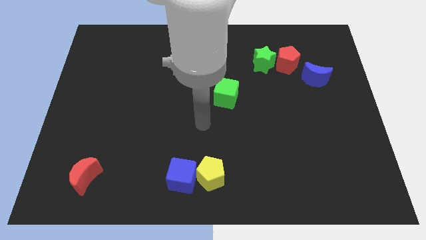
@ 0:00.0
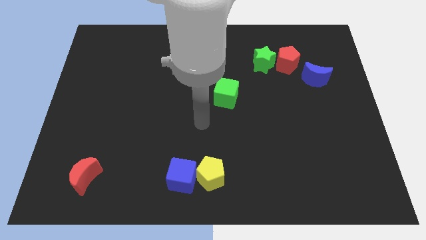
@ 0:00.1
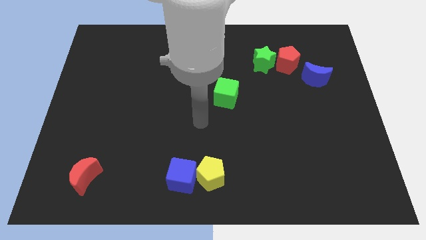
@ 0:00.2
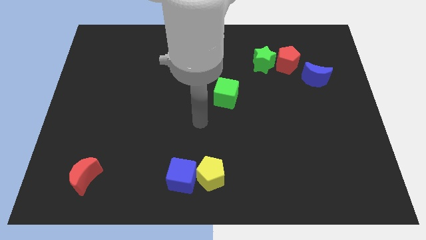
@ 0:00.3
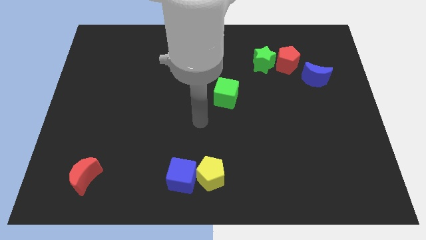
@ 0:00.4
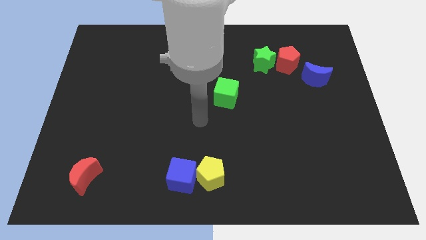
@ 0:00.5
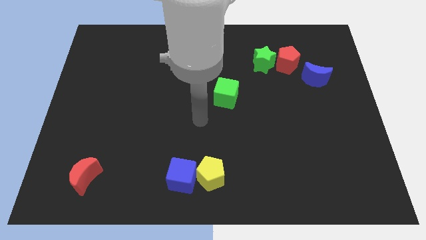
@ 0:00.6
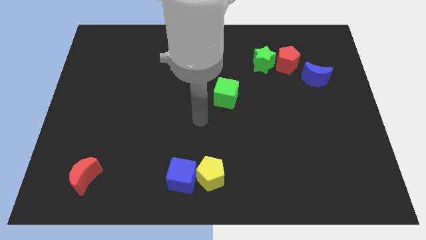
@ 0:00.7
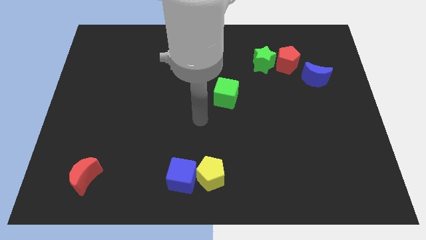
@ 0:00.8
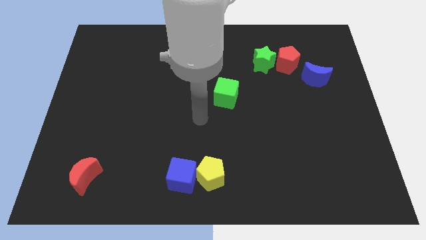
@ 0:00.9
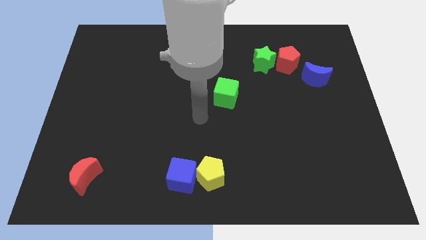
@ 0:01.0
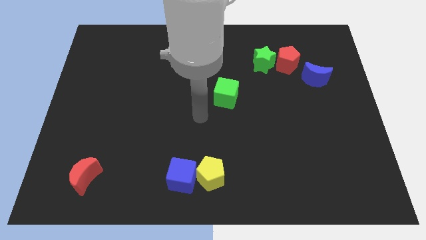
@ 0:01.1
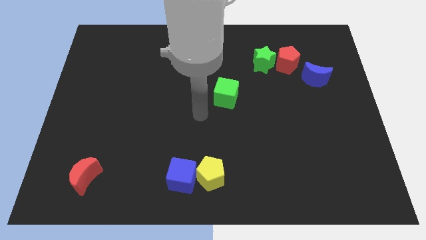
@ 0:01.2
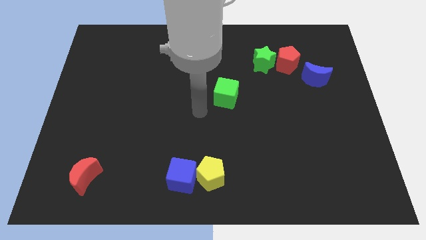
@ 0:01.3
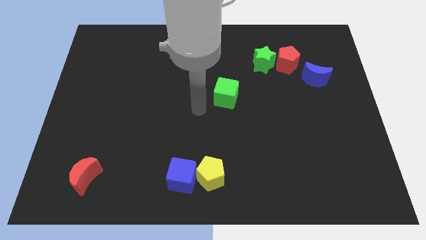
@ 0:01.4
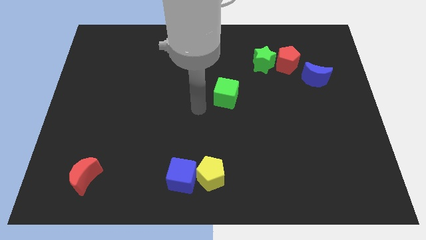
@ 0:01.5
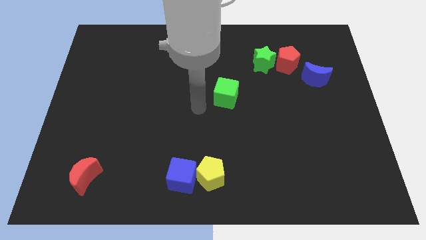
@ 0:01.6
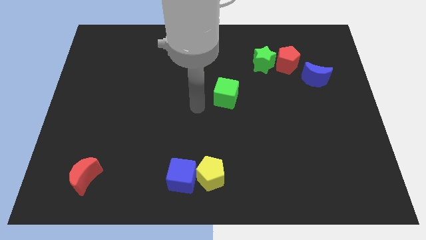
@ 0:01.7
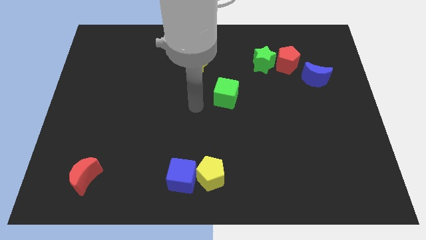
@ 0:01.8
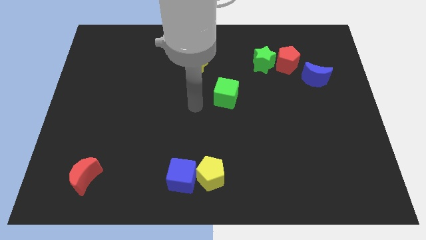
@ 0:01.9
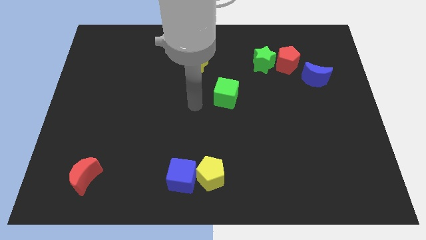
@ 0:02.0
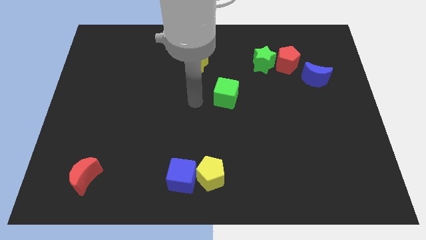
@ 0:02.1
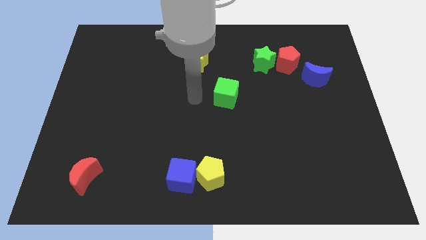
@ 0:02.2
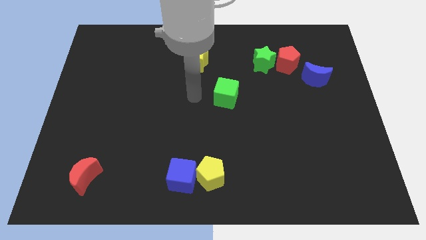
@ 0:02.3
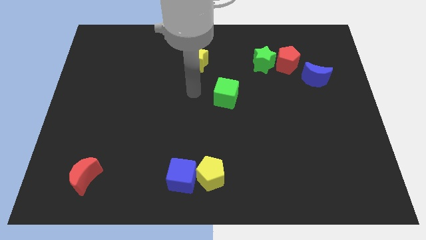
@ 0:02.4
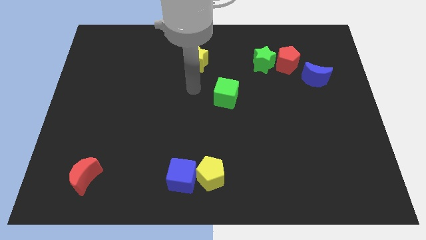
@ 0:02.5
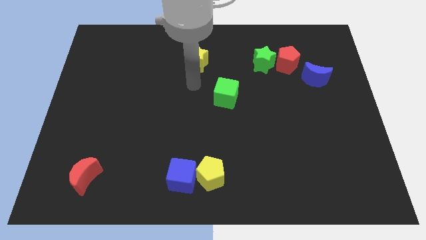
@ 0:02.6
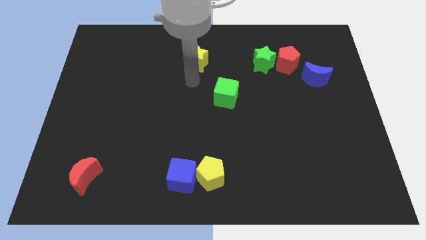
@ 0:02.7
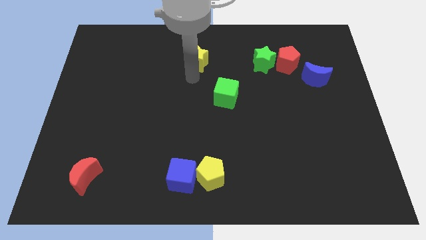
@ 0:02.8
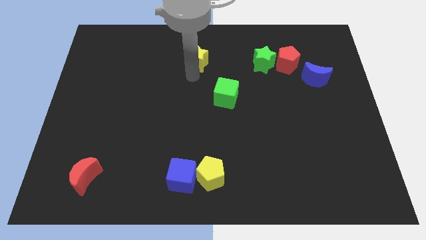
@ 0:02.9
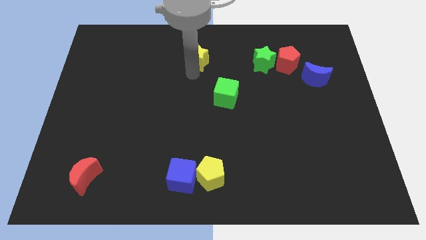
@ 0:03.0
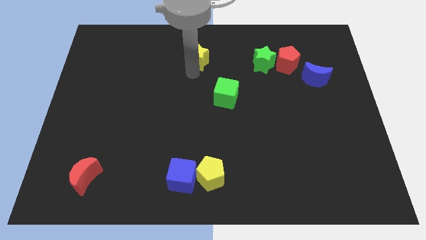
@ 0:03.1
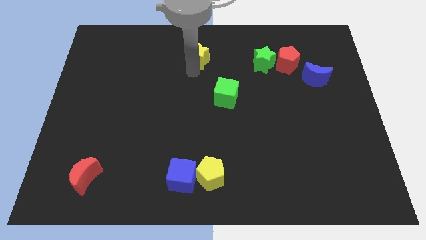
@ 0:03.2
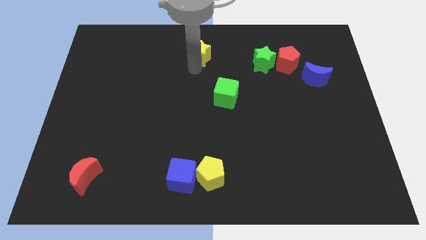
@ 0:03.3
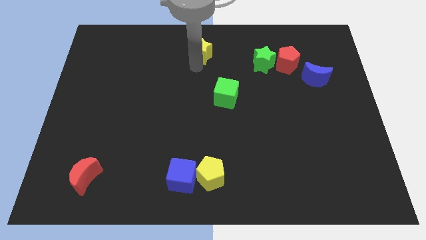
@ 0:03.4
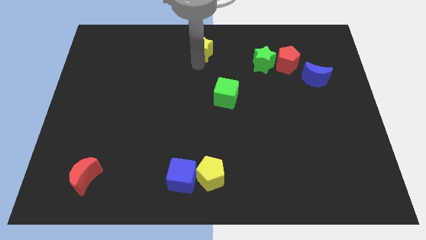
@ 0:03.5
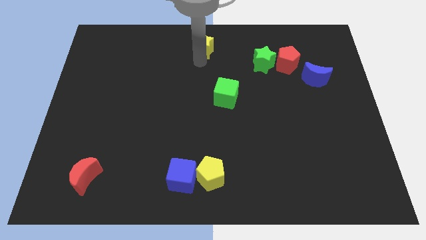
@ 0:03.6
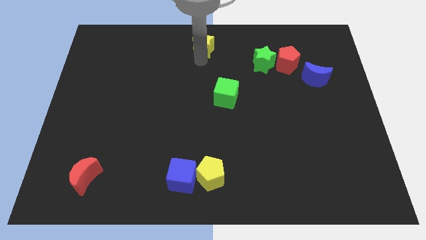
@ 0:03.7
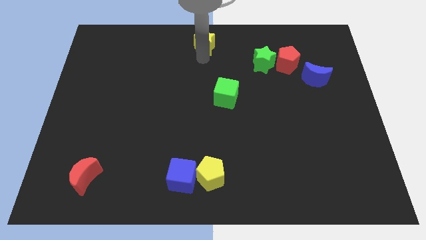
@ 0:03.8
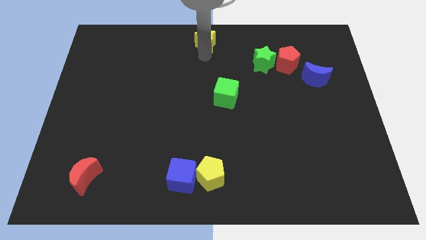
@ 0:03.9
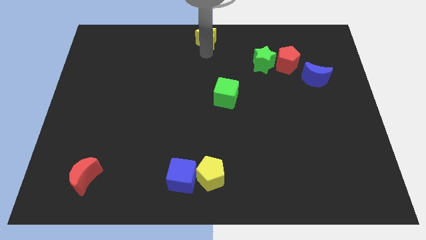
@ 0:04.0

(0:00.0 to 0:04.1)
move the yellow star to the top center of the board

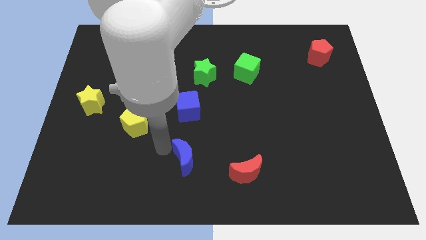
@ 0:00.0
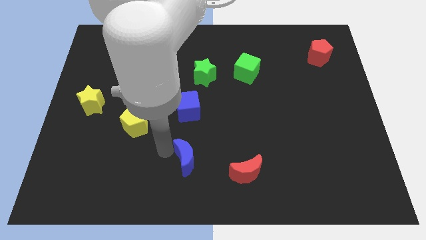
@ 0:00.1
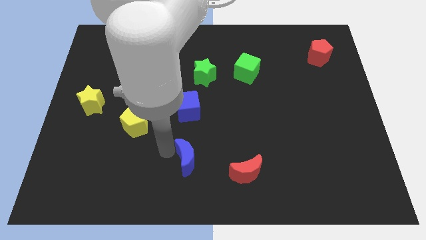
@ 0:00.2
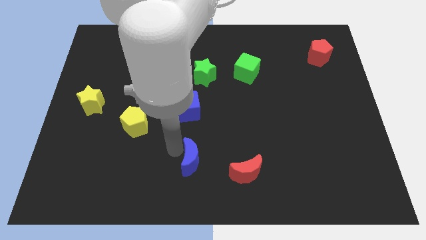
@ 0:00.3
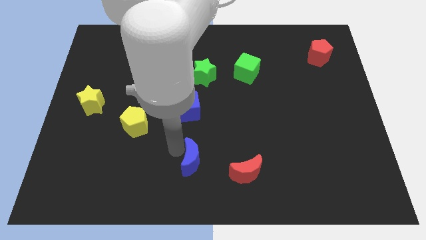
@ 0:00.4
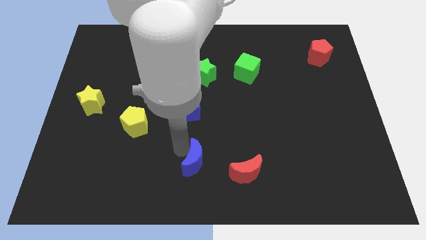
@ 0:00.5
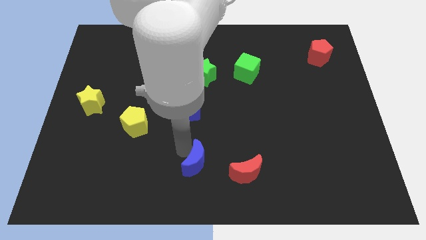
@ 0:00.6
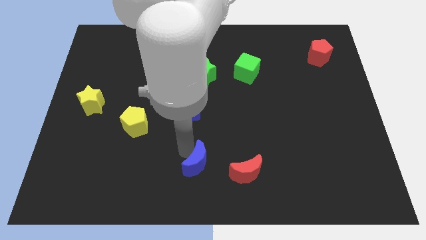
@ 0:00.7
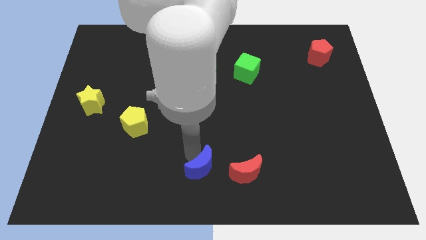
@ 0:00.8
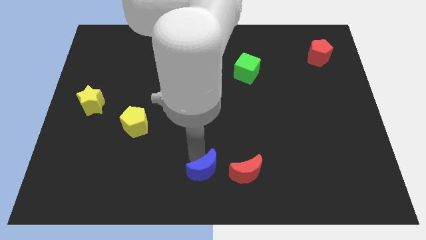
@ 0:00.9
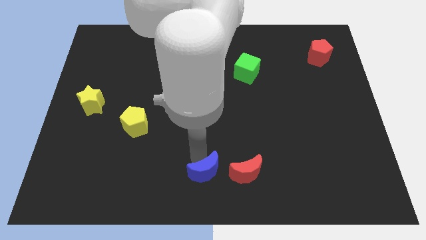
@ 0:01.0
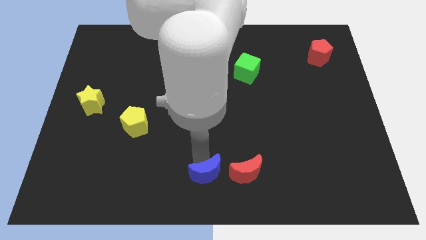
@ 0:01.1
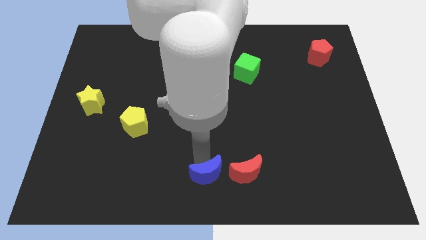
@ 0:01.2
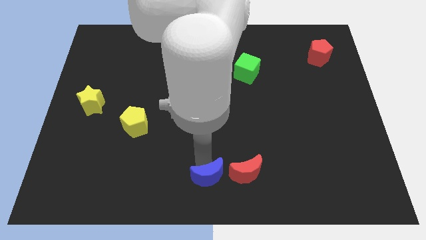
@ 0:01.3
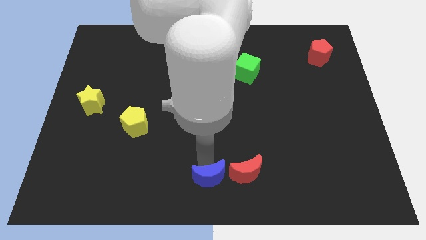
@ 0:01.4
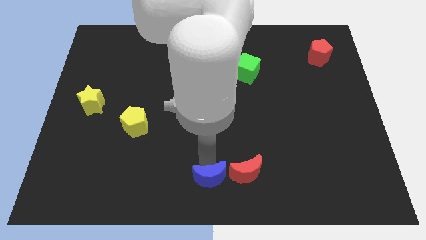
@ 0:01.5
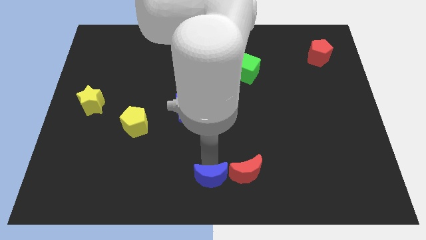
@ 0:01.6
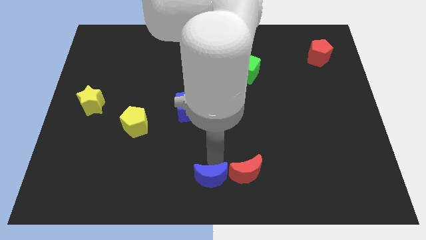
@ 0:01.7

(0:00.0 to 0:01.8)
move the blue moon closely to the red moon from left

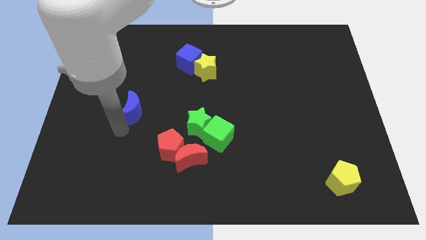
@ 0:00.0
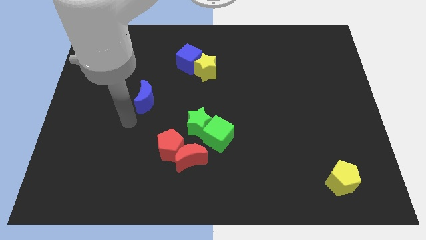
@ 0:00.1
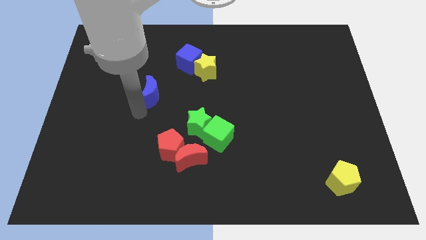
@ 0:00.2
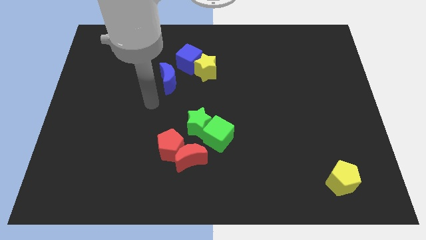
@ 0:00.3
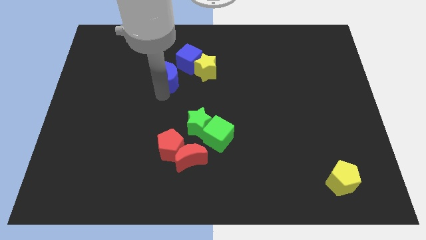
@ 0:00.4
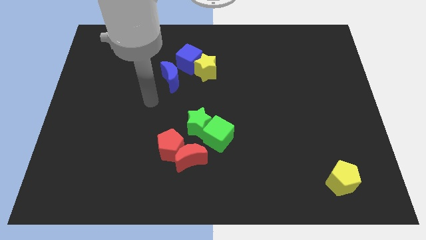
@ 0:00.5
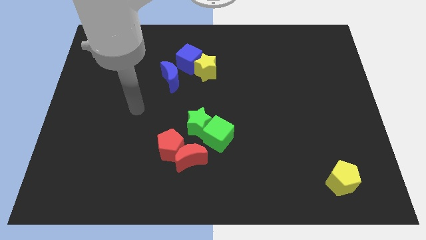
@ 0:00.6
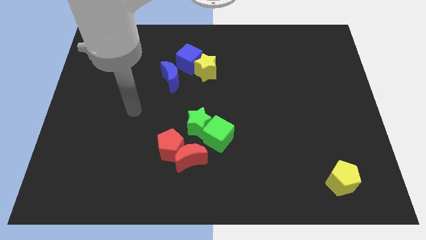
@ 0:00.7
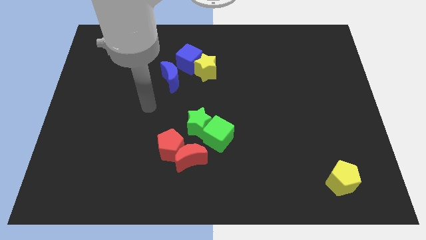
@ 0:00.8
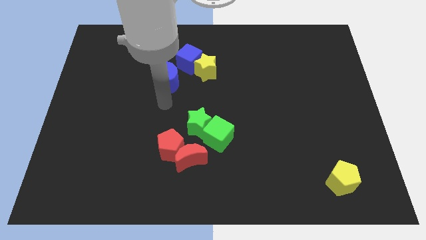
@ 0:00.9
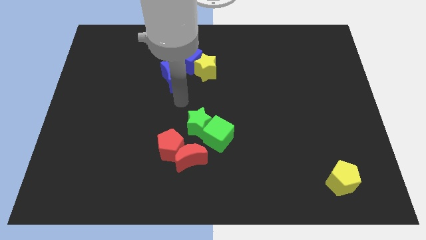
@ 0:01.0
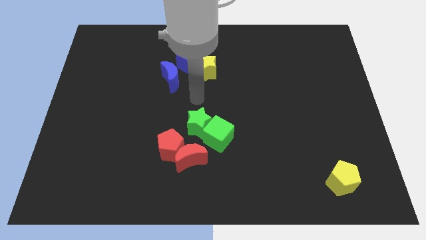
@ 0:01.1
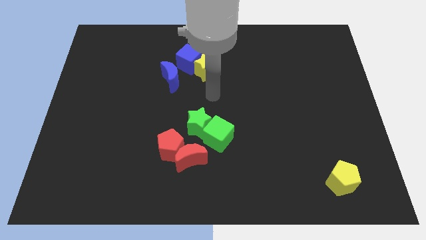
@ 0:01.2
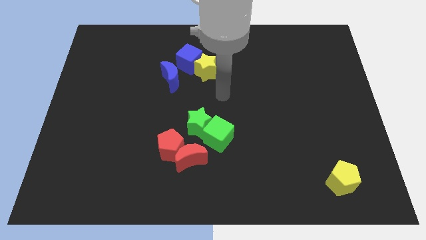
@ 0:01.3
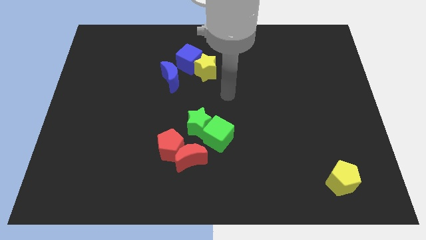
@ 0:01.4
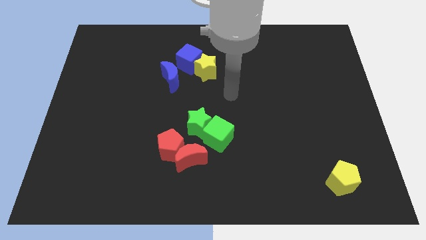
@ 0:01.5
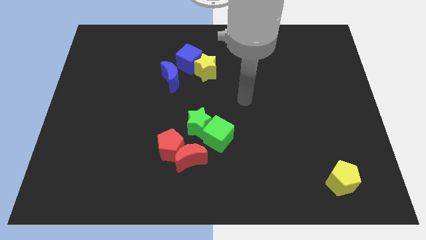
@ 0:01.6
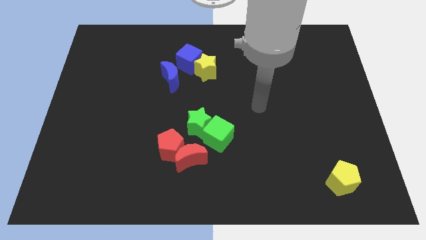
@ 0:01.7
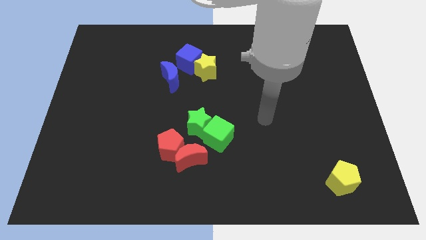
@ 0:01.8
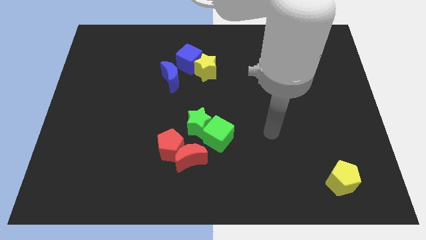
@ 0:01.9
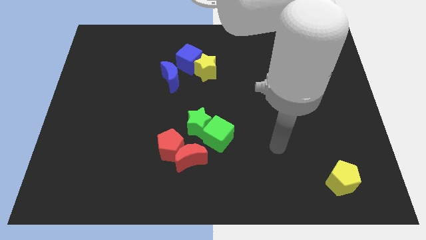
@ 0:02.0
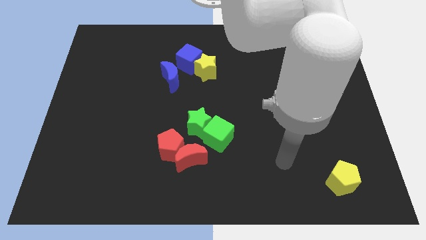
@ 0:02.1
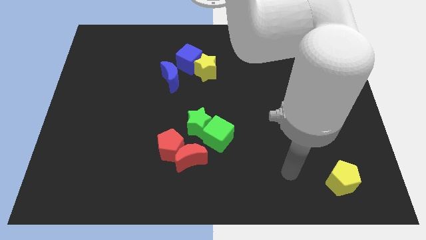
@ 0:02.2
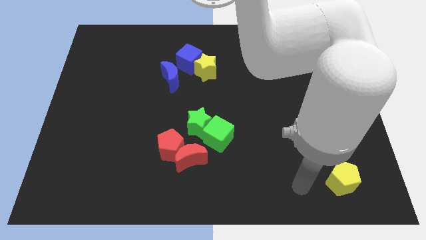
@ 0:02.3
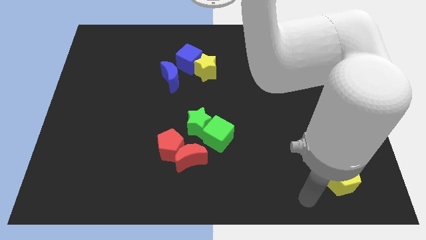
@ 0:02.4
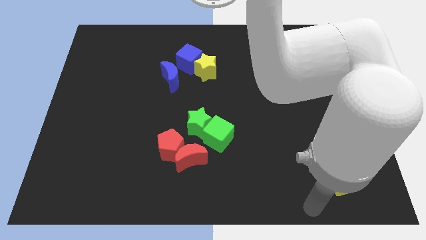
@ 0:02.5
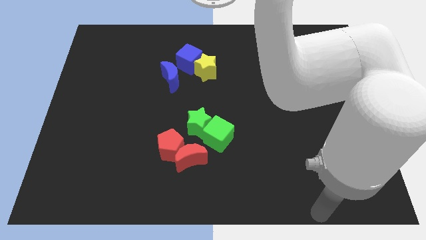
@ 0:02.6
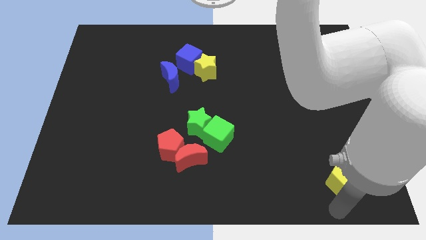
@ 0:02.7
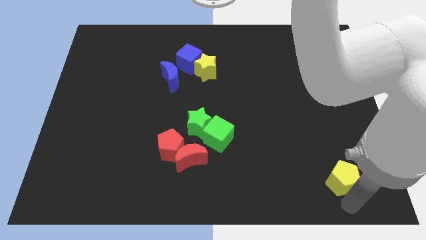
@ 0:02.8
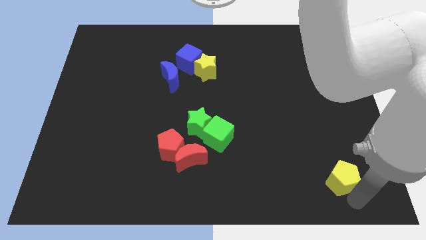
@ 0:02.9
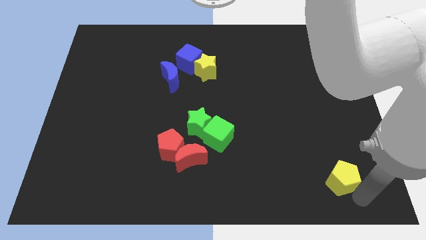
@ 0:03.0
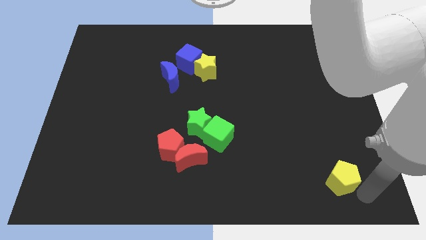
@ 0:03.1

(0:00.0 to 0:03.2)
move blue moon near blue cube
